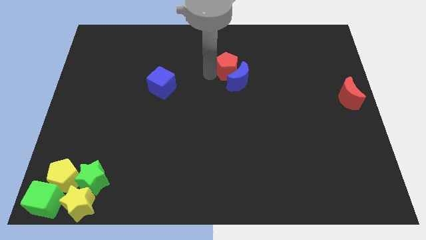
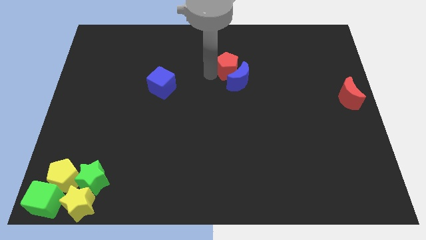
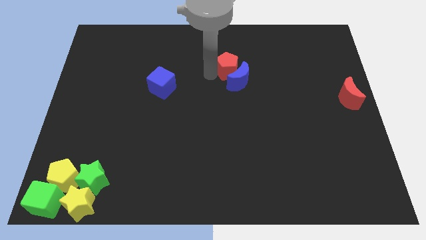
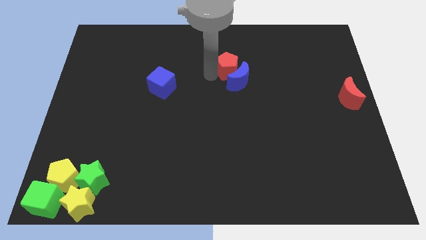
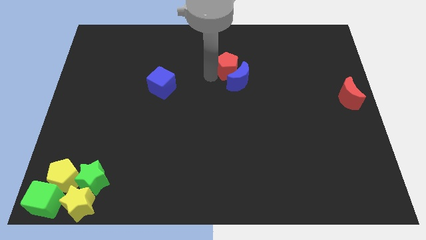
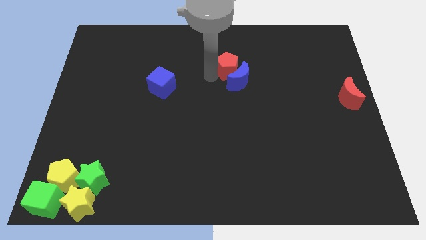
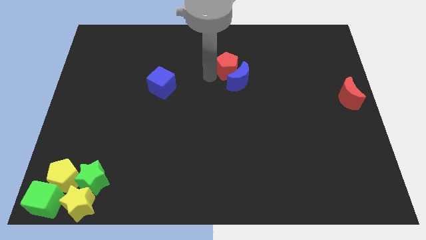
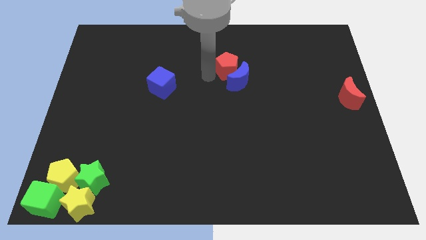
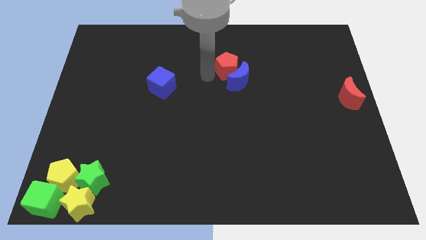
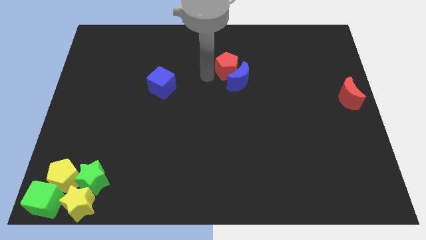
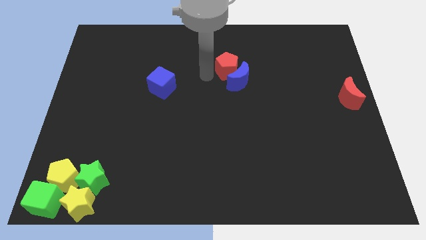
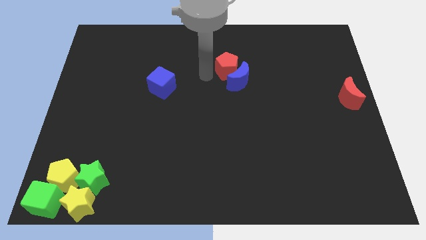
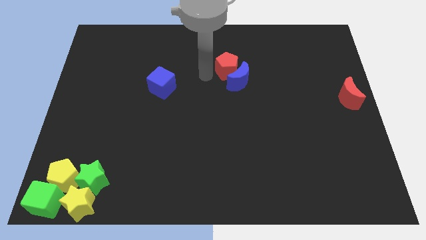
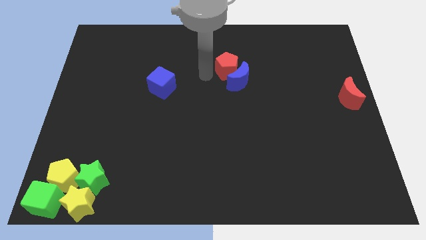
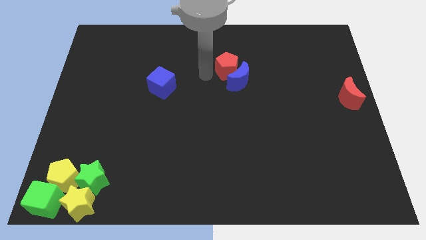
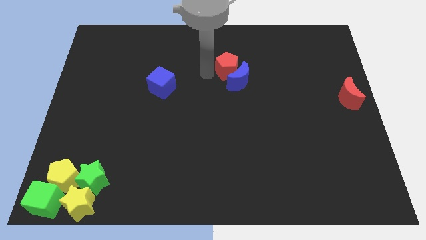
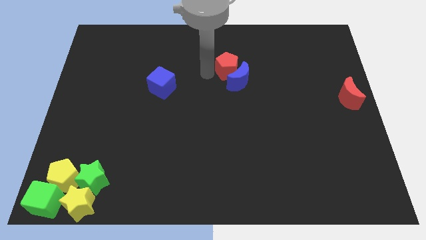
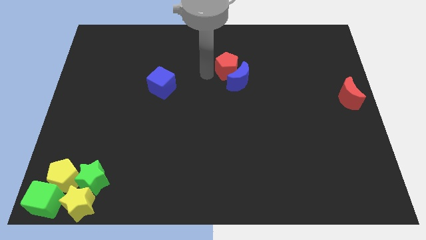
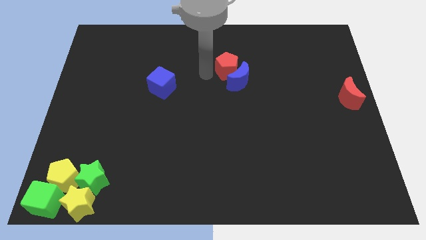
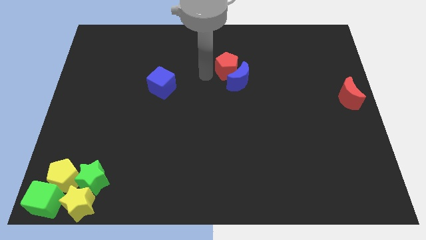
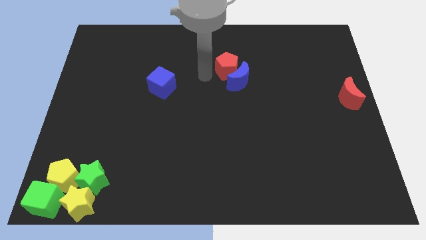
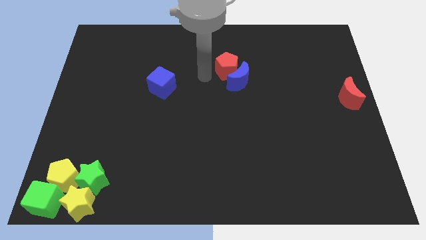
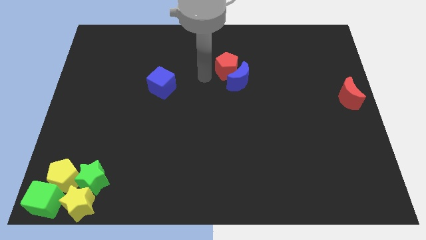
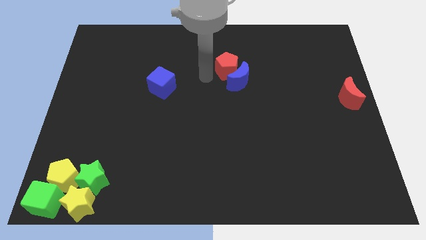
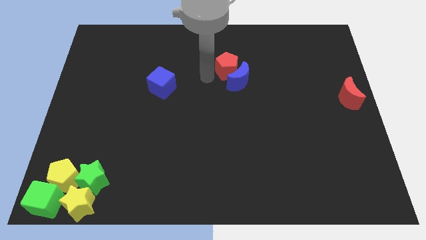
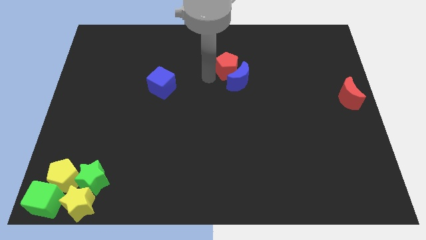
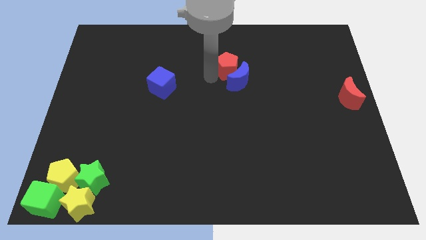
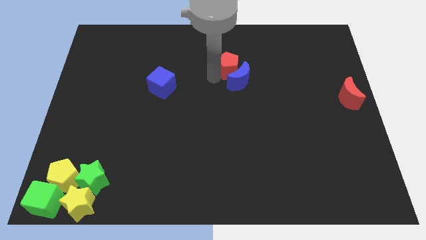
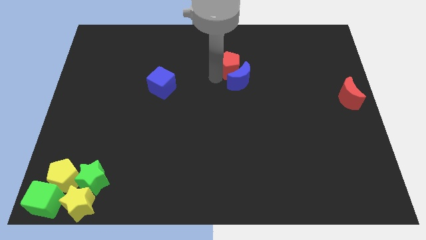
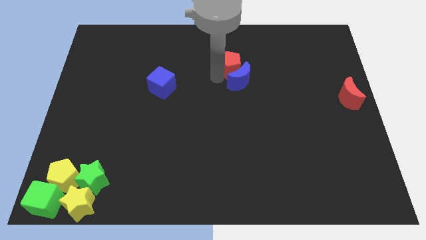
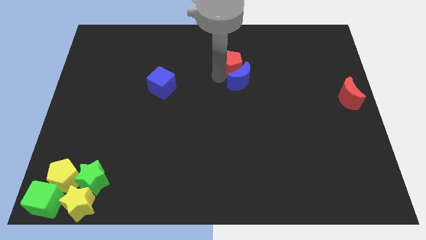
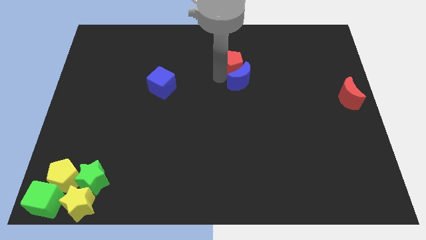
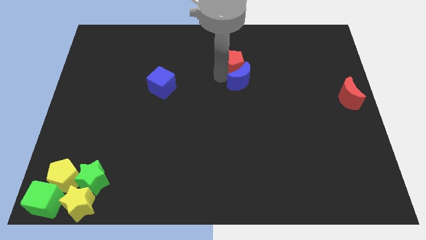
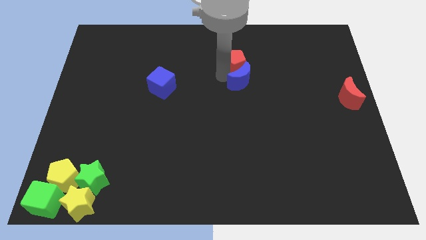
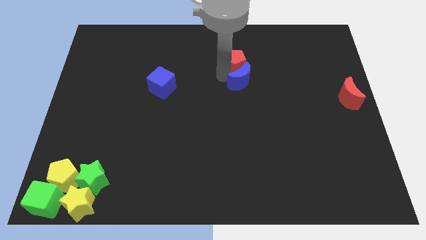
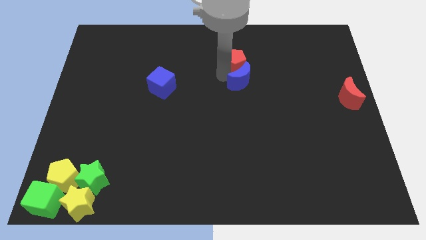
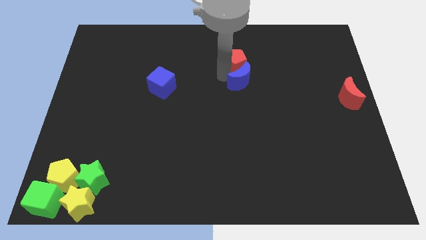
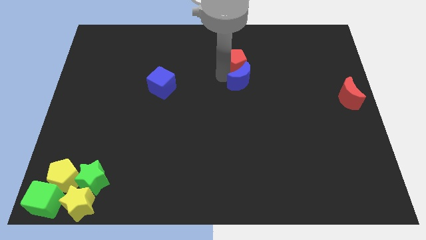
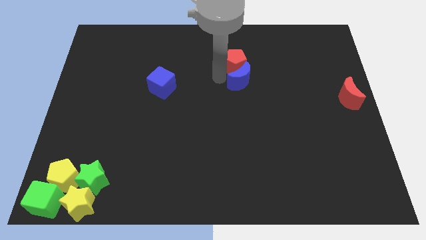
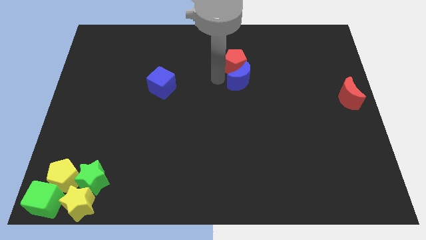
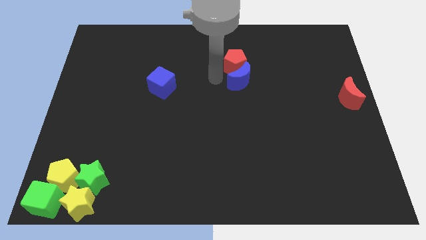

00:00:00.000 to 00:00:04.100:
slide red pentagon on top of blue moon

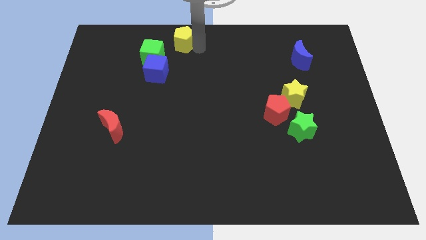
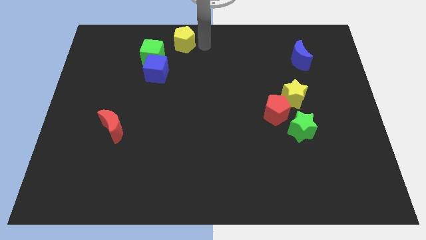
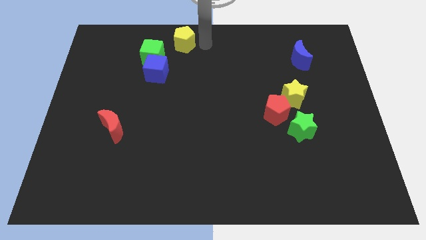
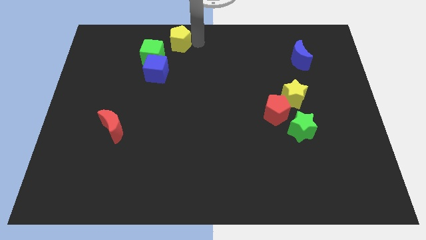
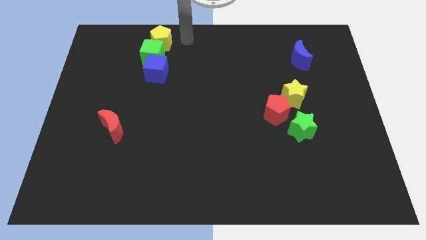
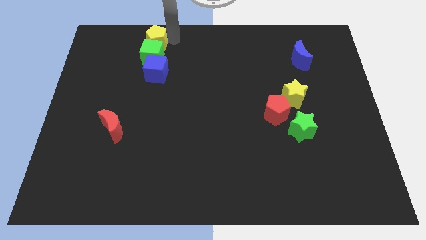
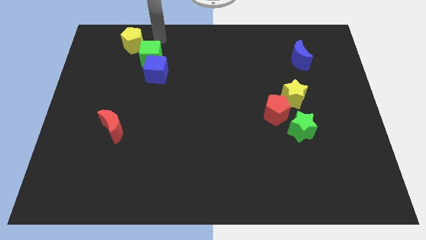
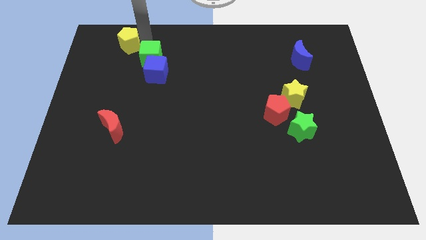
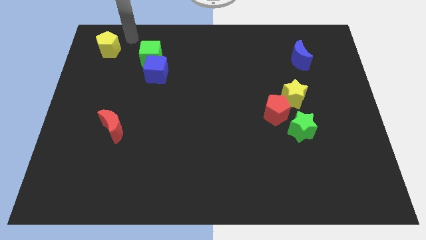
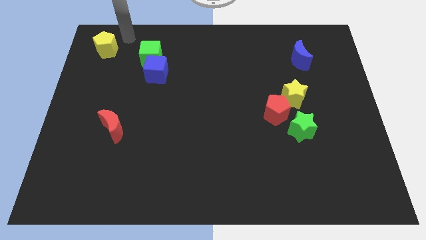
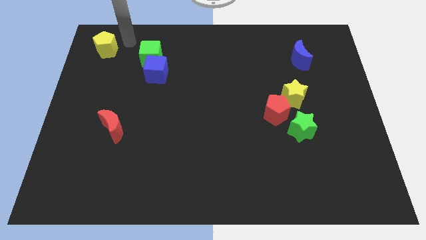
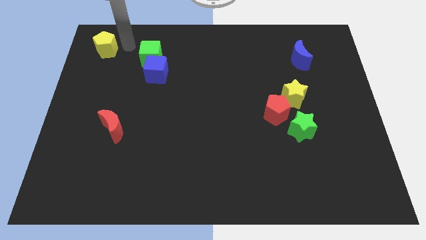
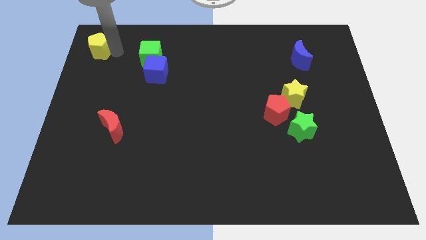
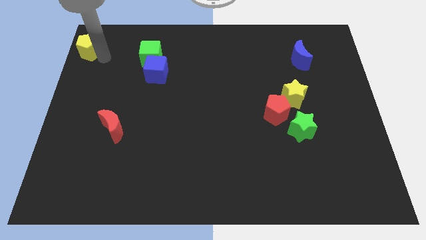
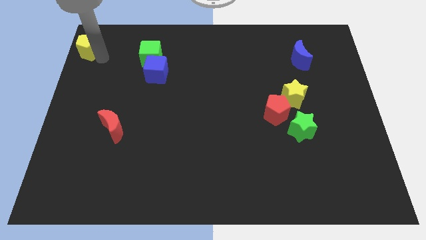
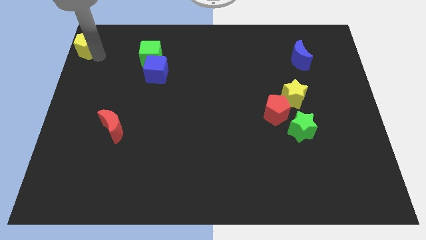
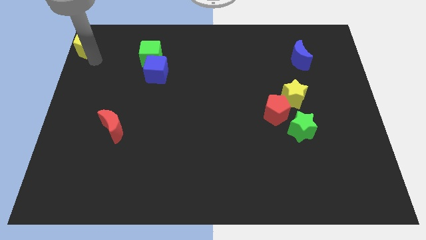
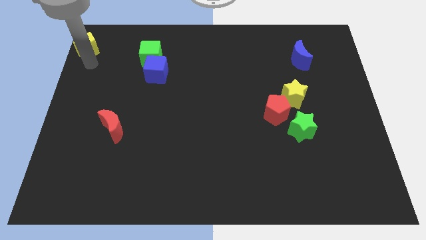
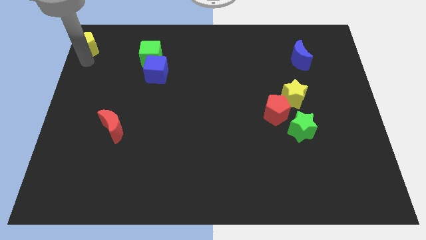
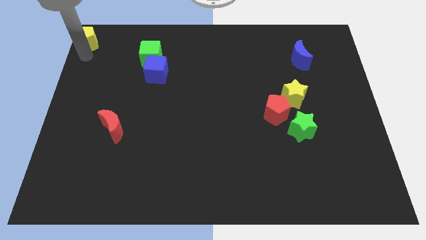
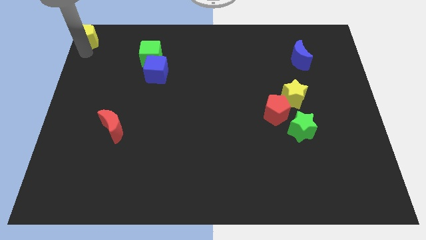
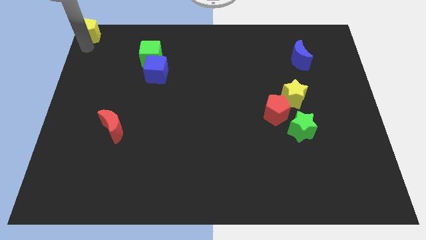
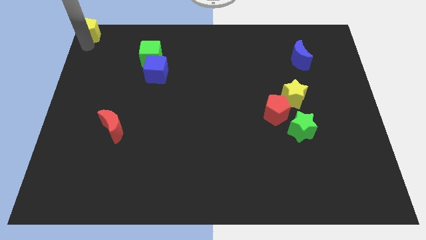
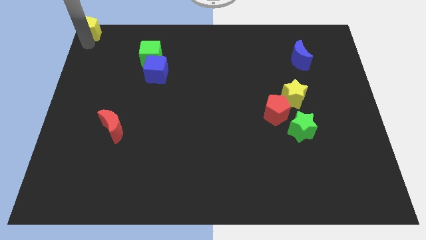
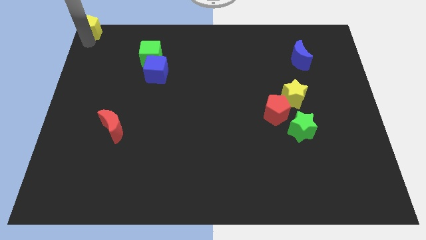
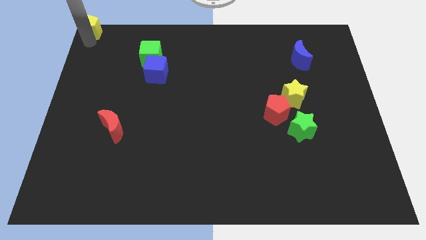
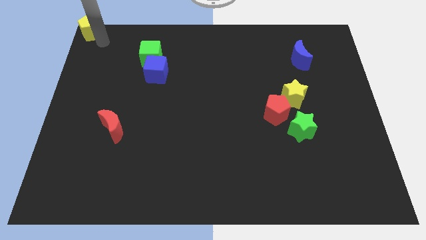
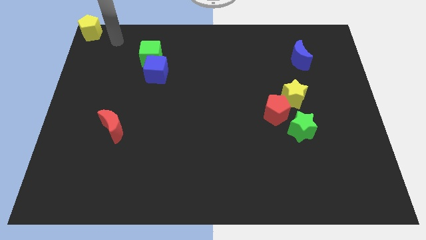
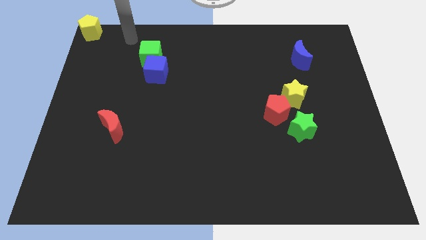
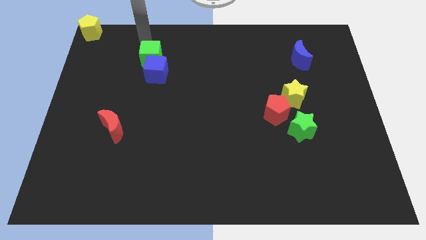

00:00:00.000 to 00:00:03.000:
push the yellow pentagon to the top left corner

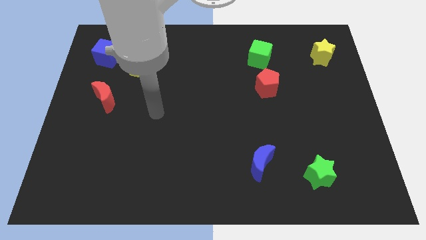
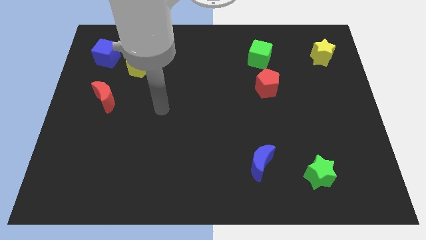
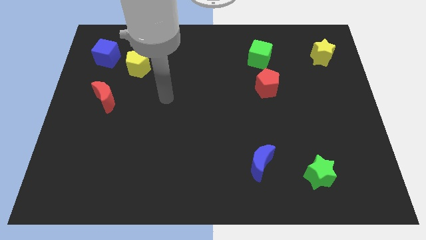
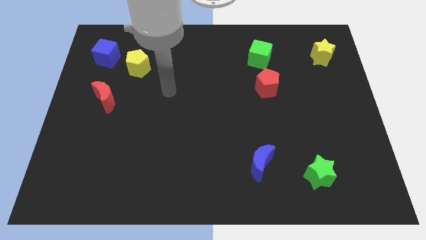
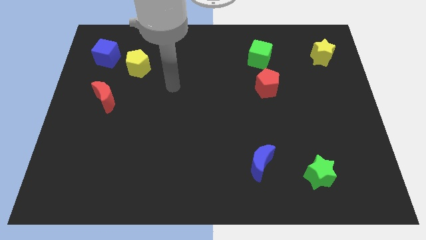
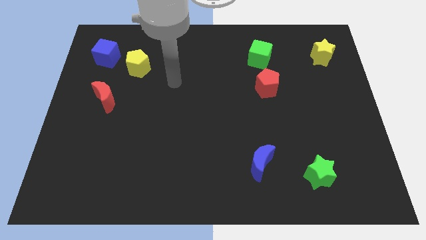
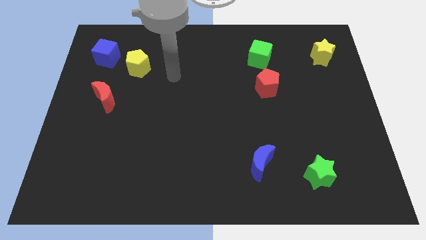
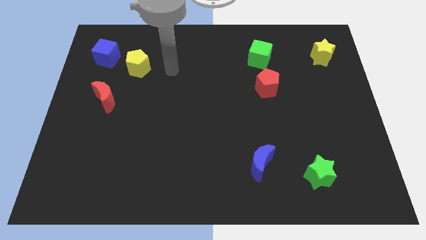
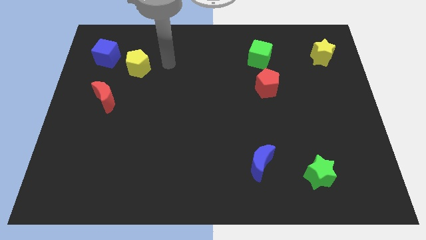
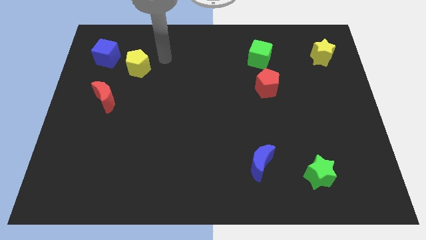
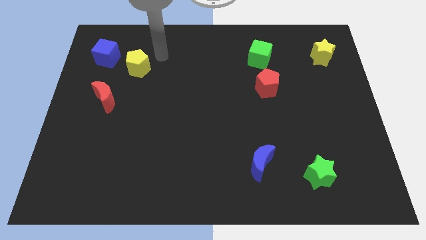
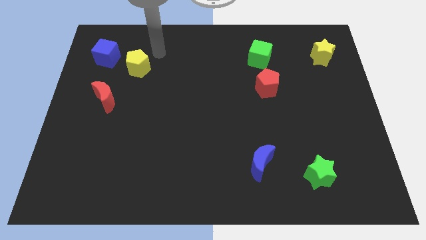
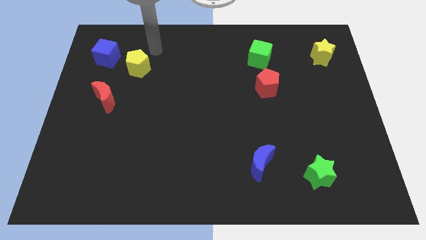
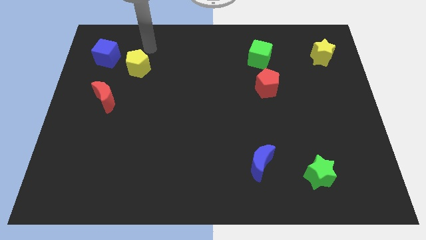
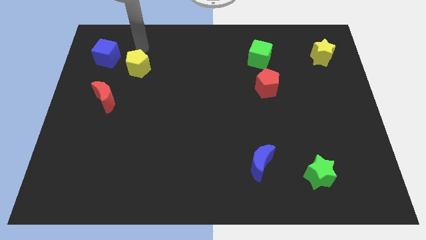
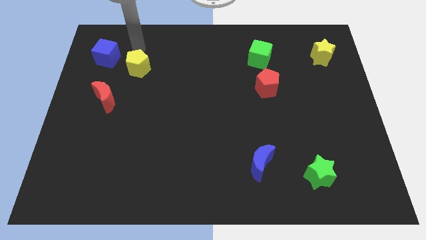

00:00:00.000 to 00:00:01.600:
point your arm at the top of the yellow pentagon

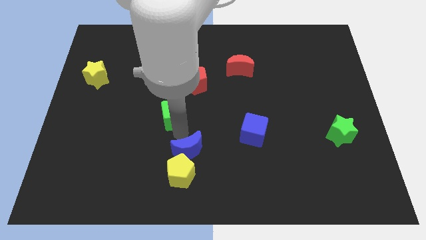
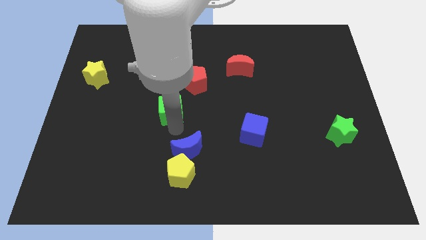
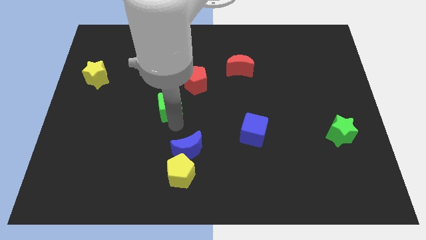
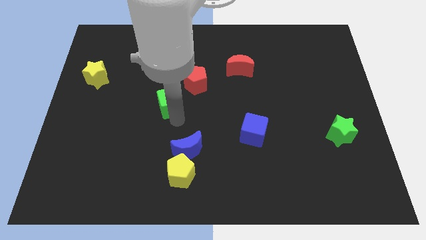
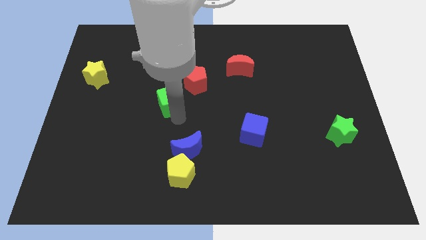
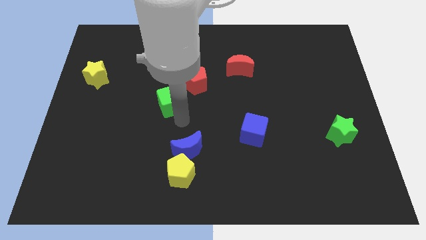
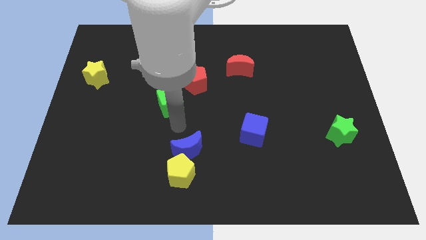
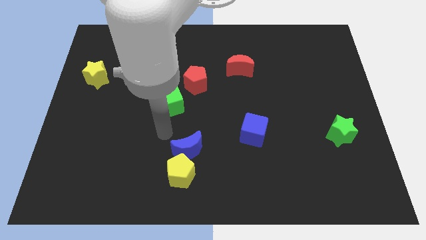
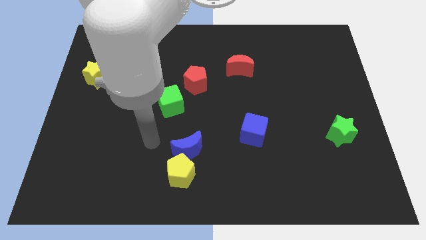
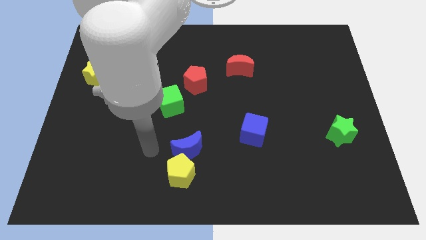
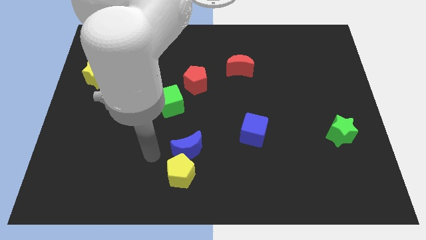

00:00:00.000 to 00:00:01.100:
slightly push the green cube towards the top side of the board
